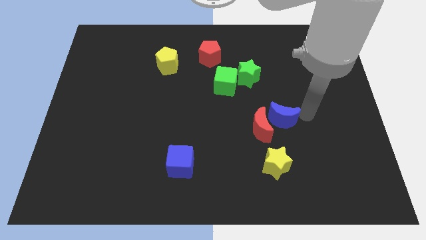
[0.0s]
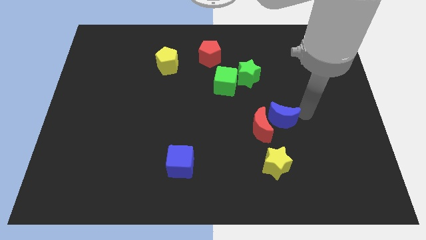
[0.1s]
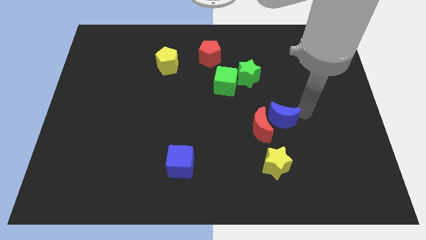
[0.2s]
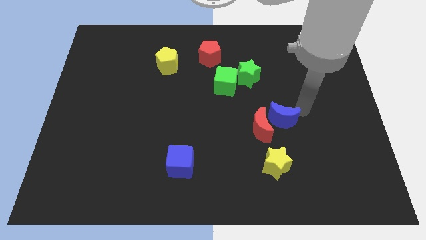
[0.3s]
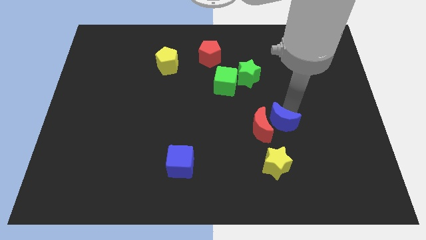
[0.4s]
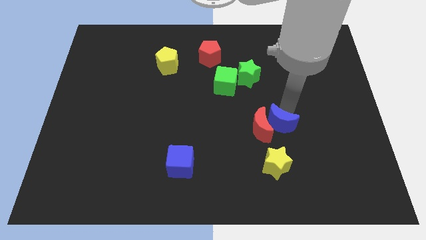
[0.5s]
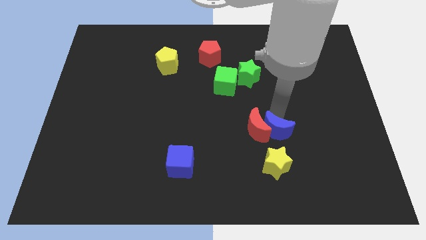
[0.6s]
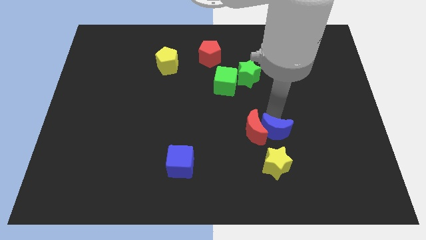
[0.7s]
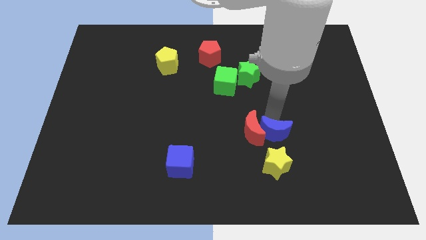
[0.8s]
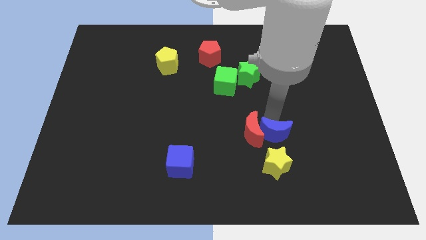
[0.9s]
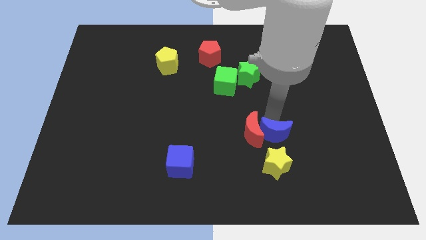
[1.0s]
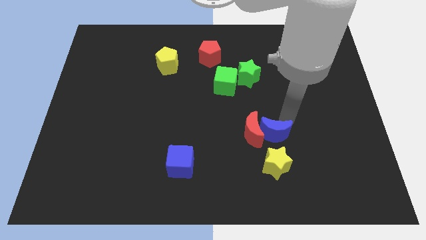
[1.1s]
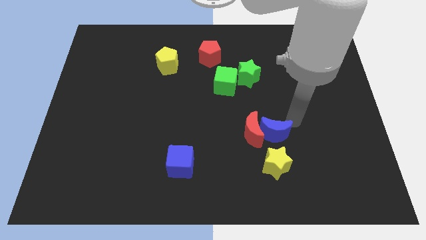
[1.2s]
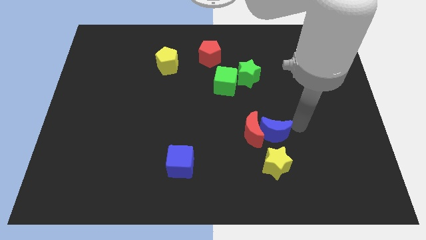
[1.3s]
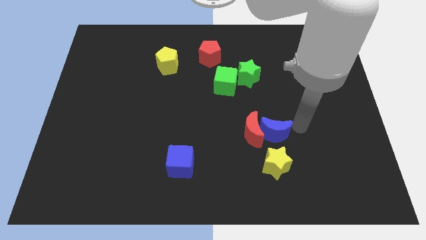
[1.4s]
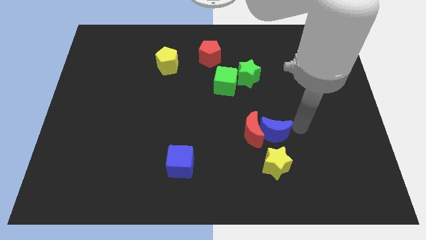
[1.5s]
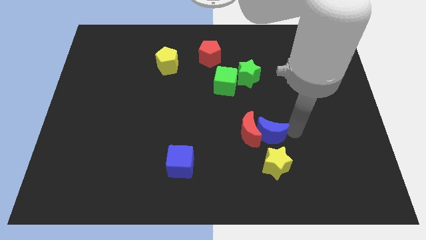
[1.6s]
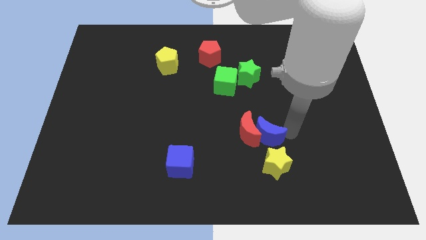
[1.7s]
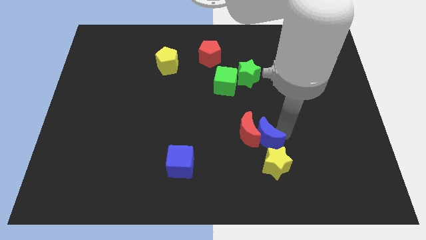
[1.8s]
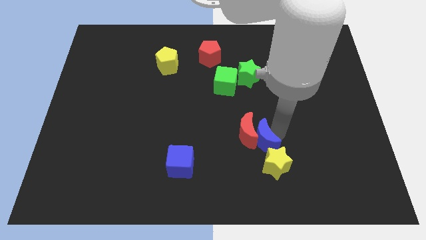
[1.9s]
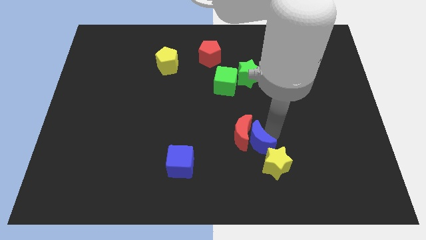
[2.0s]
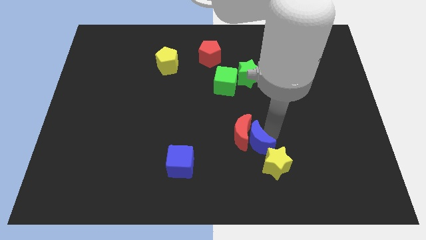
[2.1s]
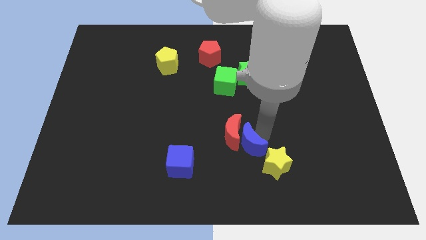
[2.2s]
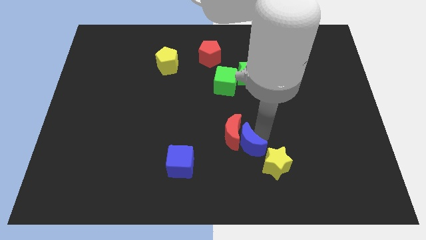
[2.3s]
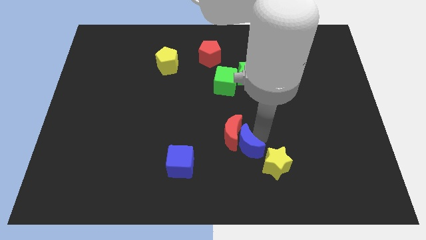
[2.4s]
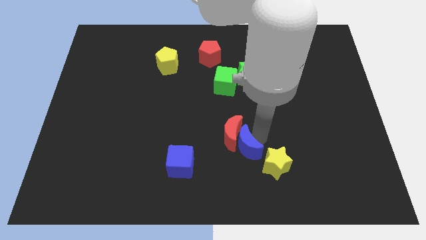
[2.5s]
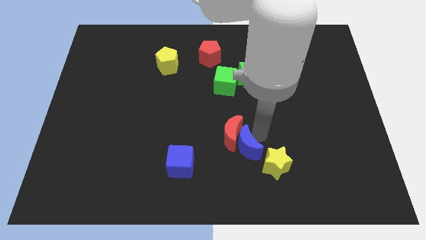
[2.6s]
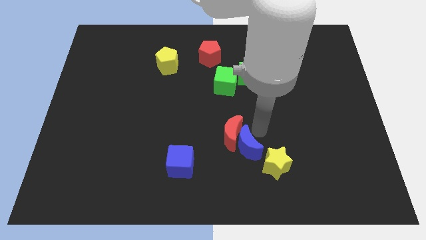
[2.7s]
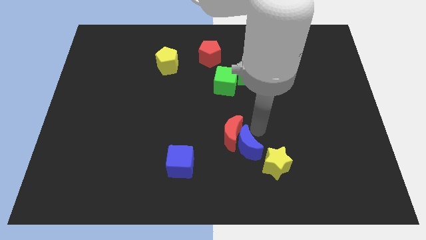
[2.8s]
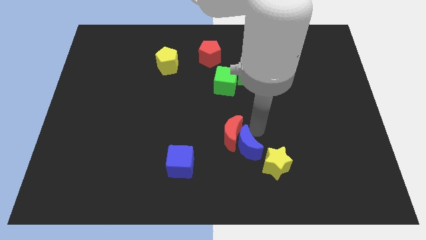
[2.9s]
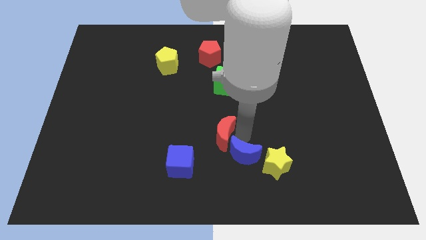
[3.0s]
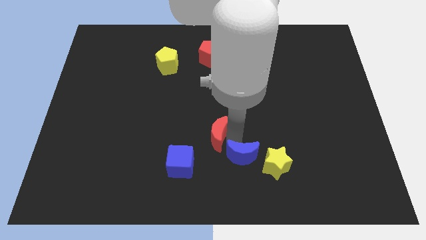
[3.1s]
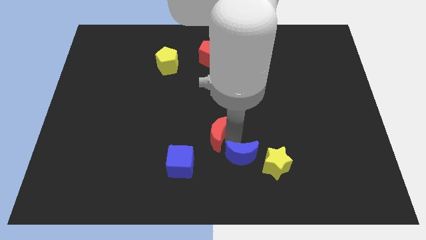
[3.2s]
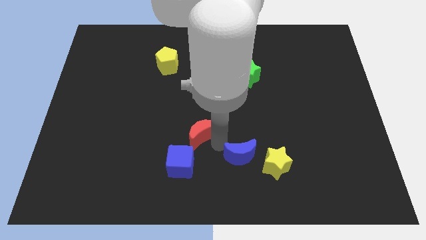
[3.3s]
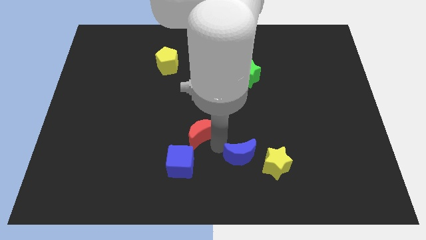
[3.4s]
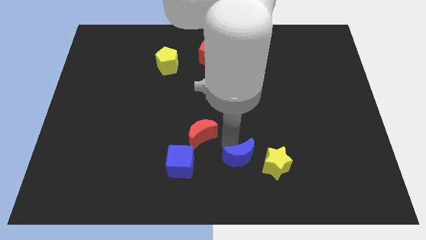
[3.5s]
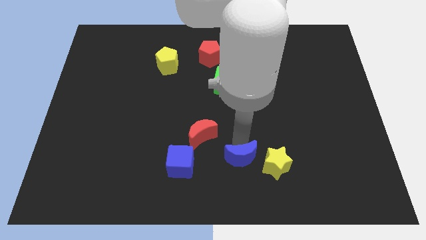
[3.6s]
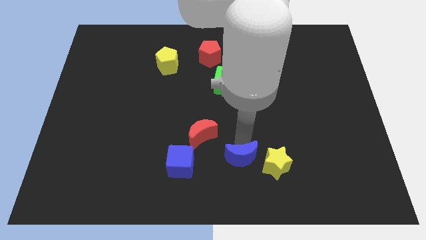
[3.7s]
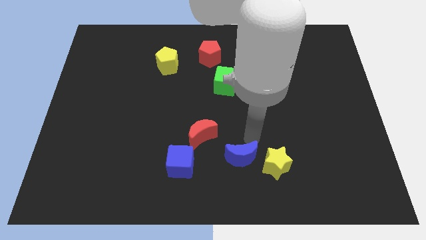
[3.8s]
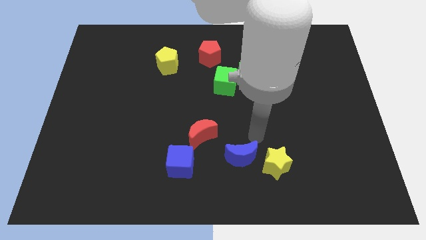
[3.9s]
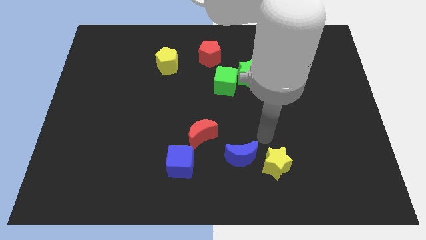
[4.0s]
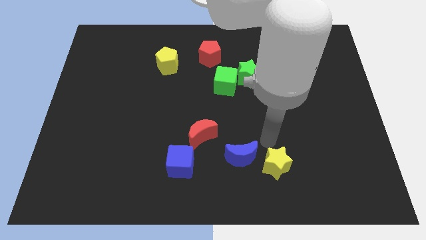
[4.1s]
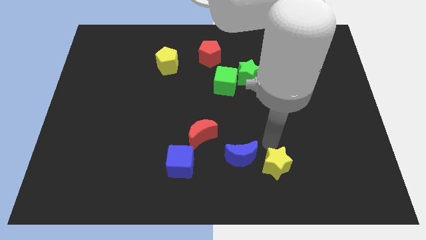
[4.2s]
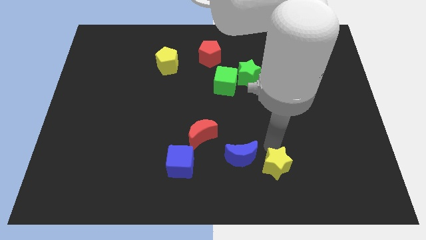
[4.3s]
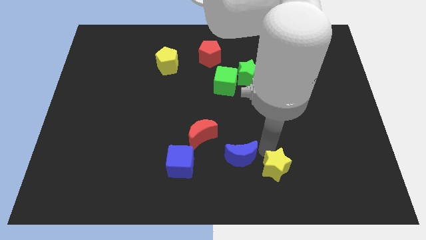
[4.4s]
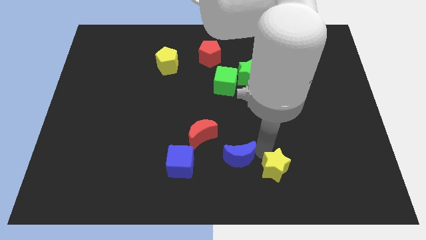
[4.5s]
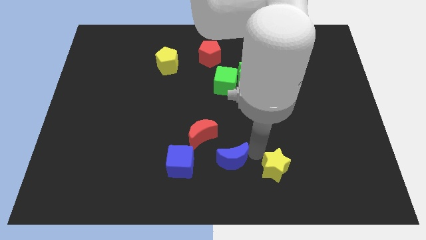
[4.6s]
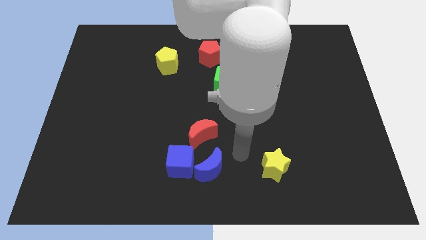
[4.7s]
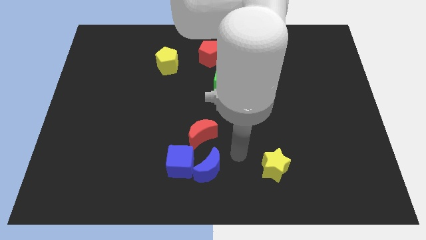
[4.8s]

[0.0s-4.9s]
place the blue moon in between the yellow star and blue cube

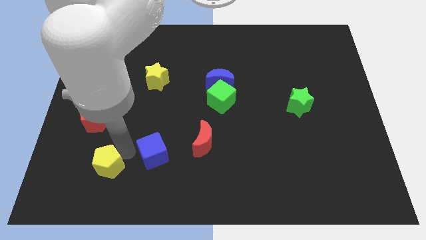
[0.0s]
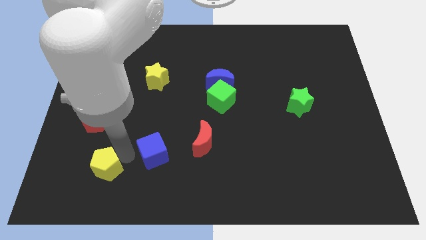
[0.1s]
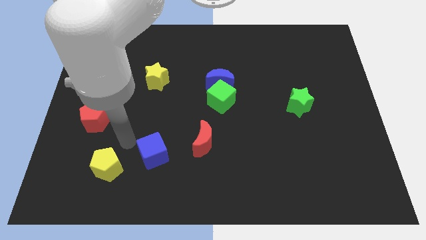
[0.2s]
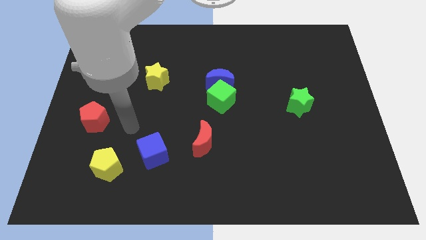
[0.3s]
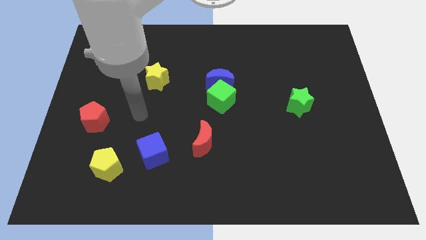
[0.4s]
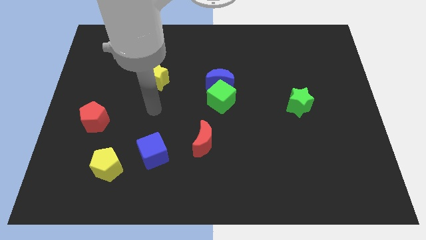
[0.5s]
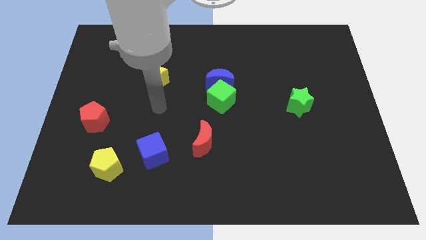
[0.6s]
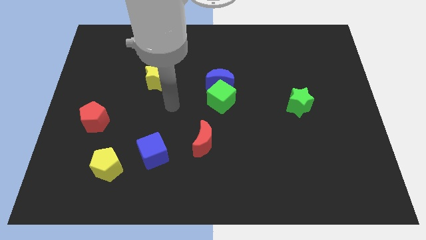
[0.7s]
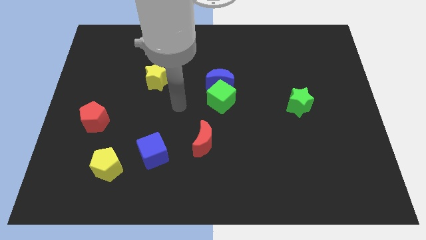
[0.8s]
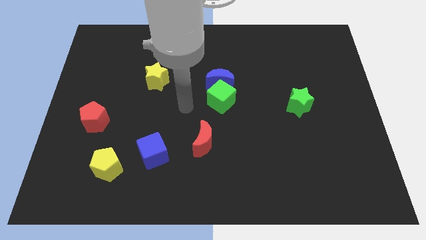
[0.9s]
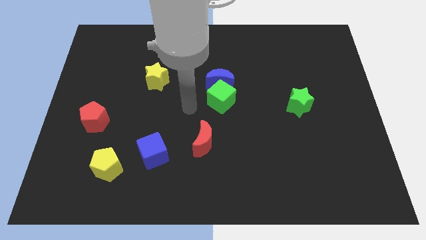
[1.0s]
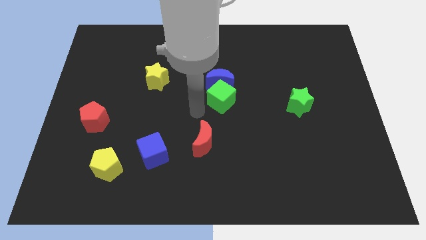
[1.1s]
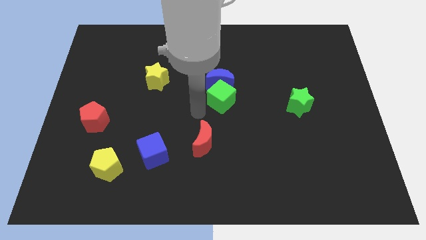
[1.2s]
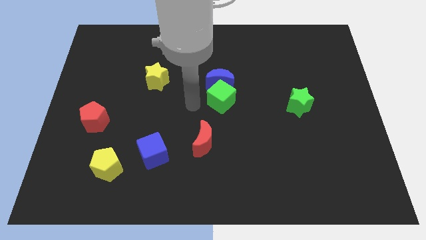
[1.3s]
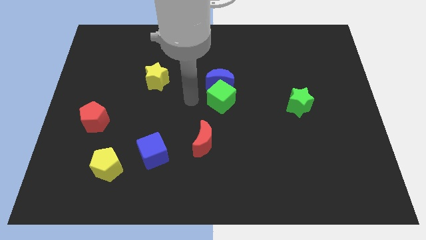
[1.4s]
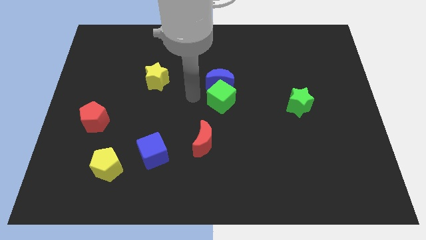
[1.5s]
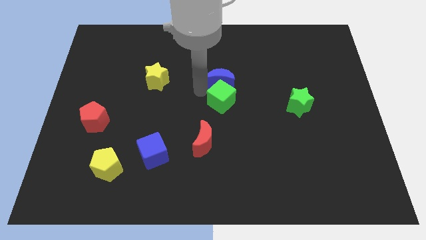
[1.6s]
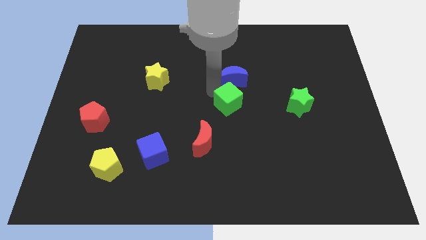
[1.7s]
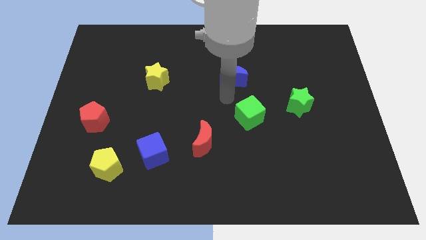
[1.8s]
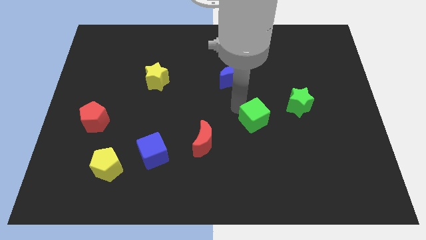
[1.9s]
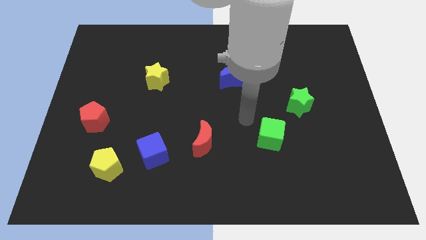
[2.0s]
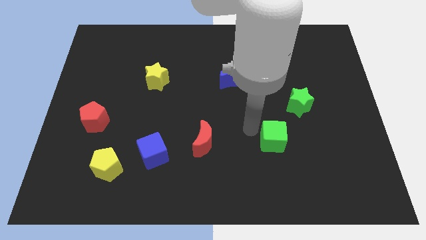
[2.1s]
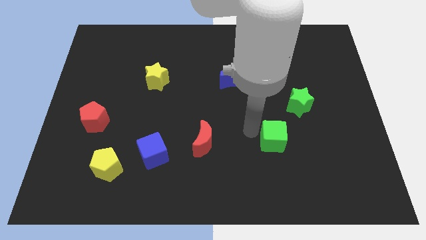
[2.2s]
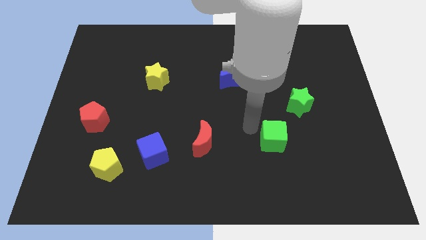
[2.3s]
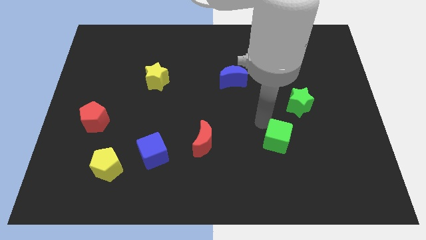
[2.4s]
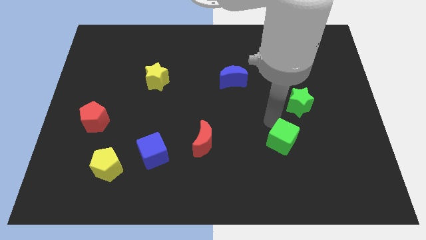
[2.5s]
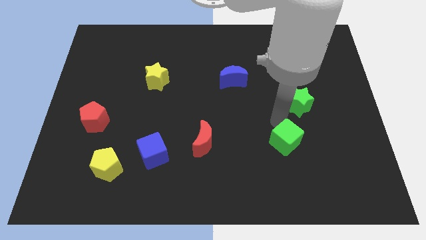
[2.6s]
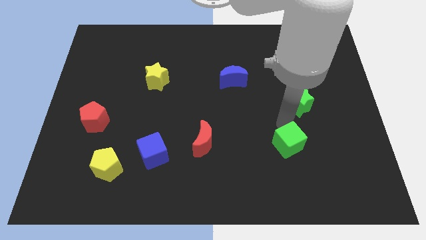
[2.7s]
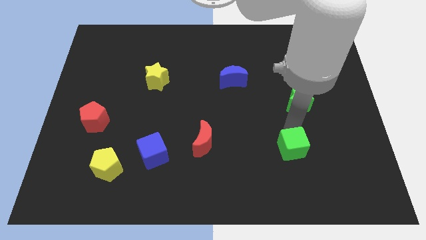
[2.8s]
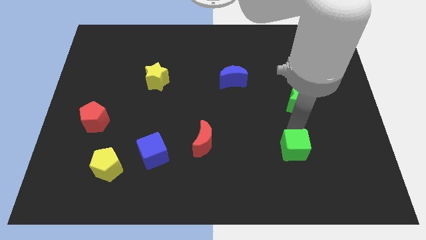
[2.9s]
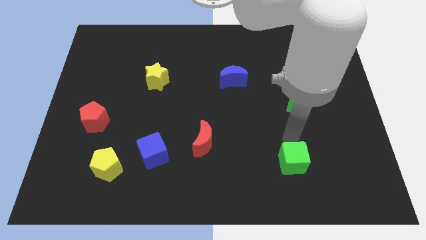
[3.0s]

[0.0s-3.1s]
place the green cube below to the green star

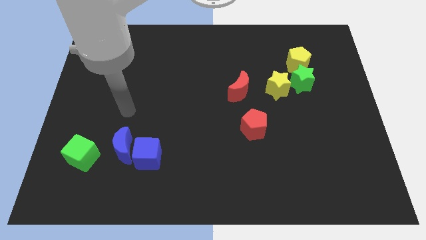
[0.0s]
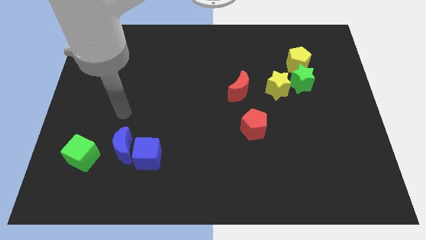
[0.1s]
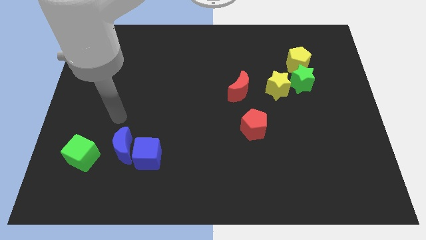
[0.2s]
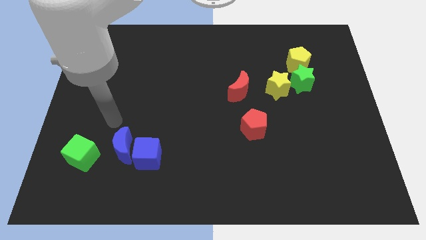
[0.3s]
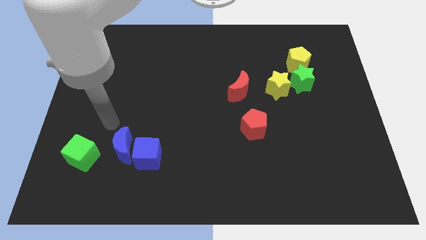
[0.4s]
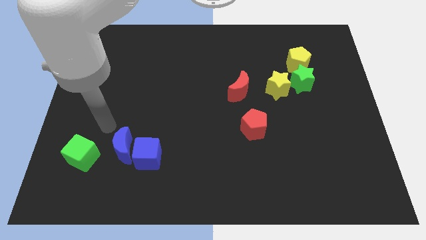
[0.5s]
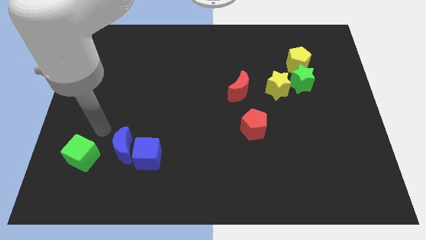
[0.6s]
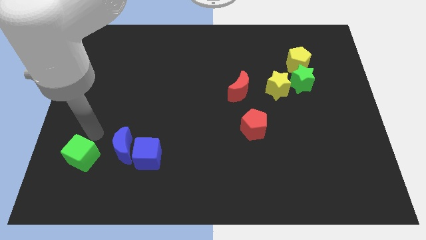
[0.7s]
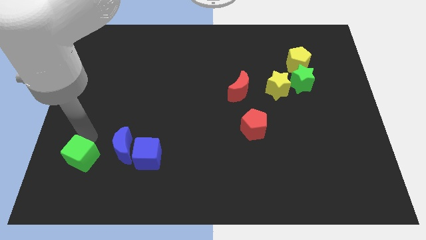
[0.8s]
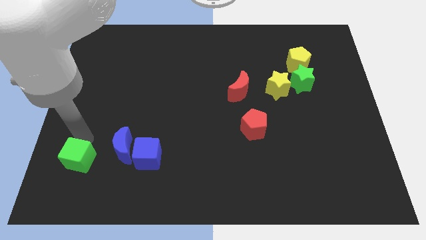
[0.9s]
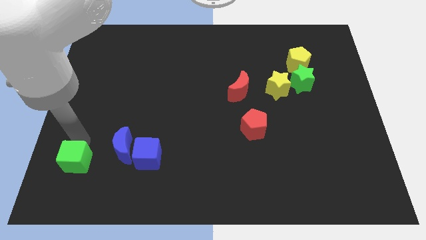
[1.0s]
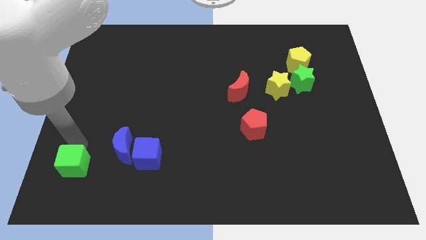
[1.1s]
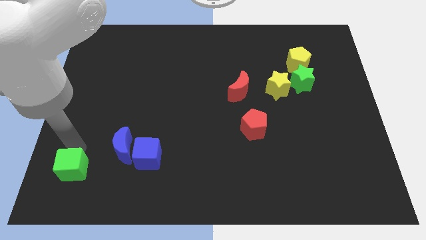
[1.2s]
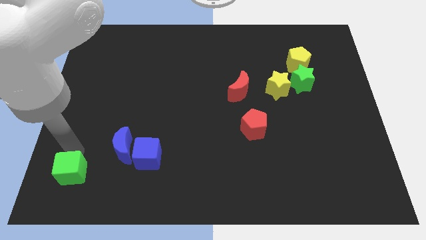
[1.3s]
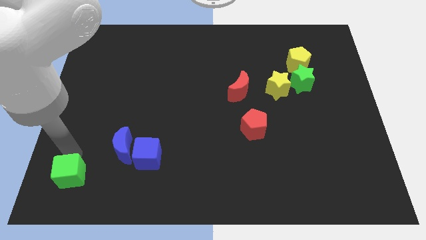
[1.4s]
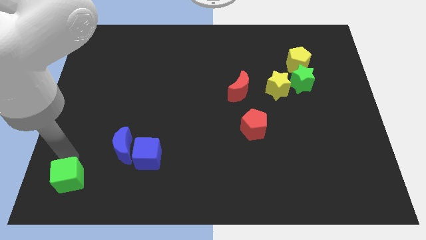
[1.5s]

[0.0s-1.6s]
push the green cube down slightly
